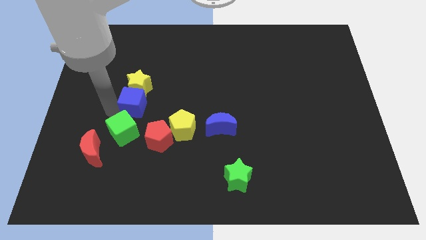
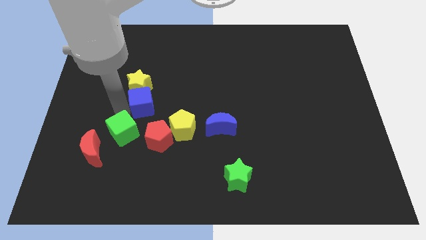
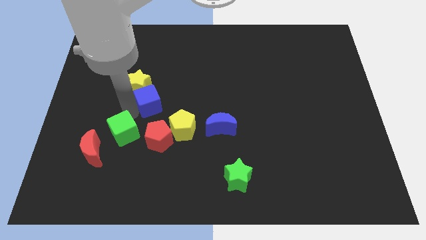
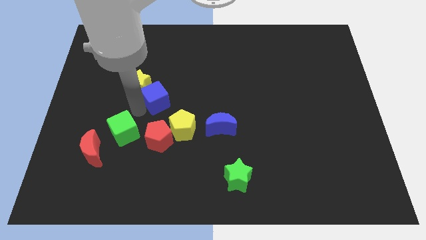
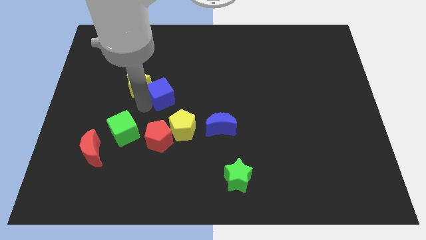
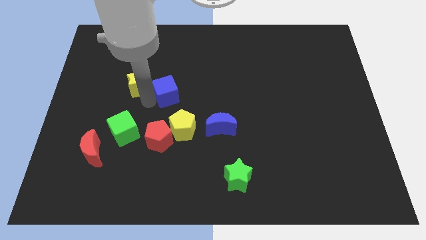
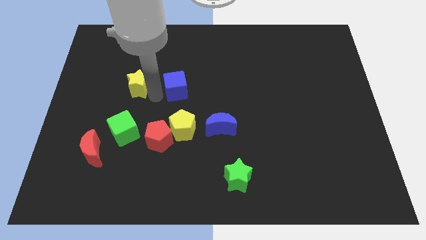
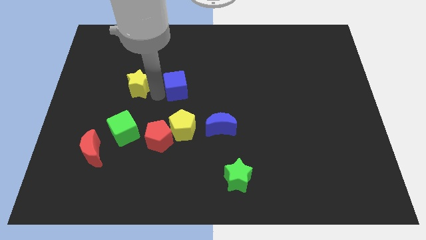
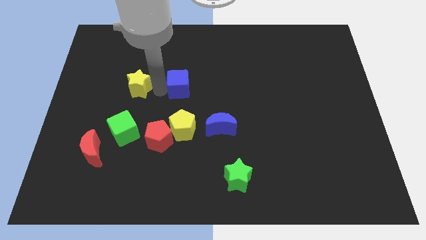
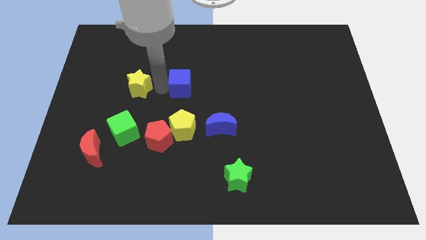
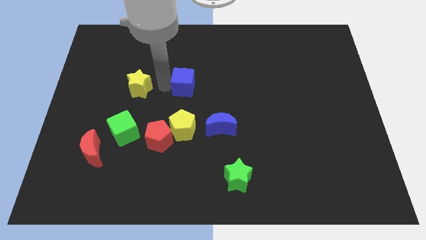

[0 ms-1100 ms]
push the blue cube to the right of the yellow star

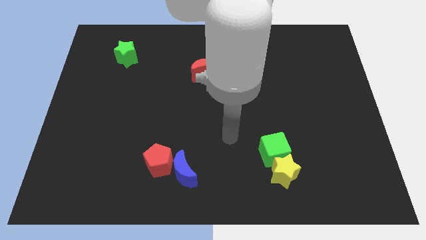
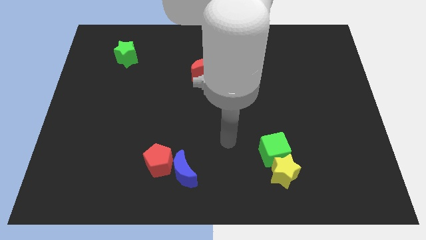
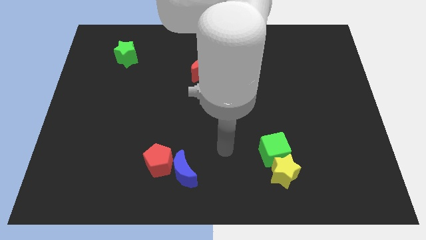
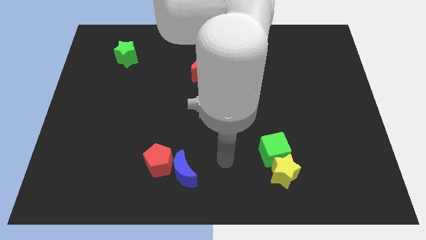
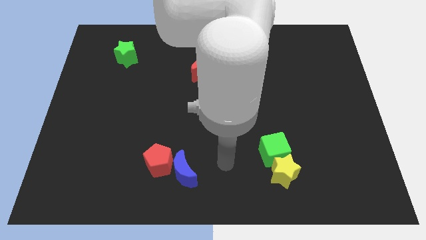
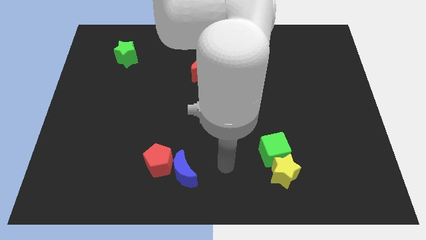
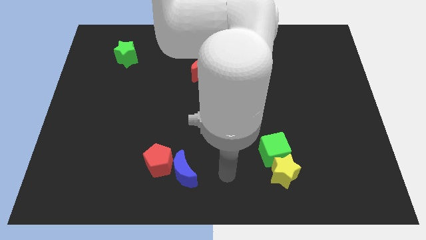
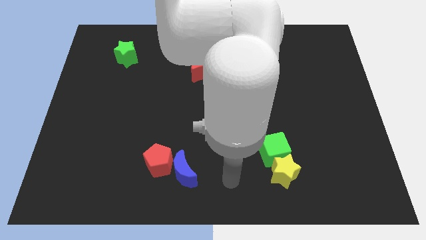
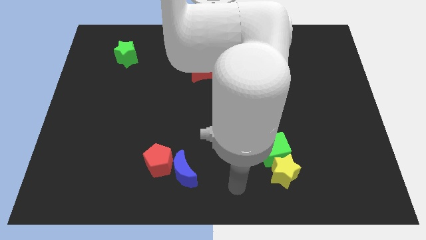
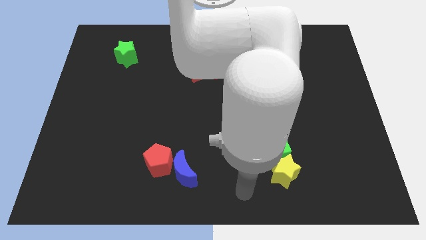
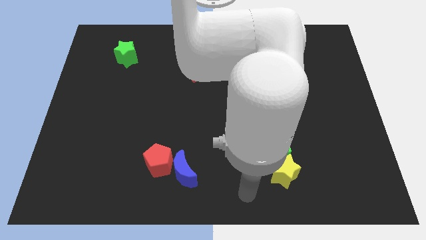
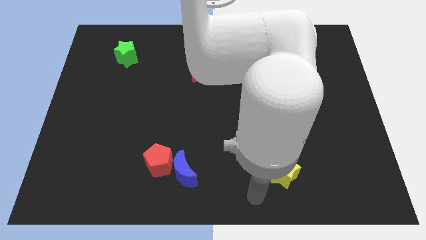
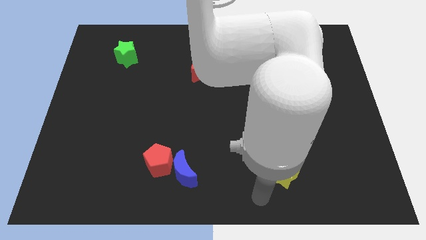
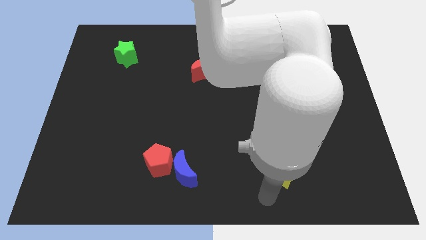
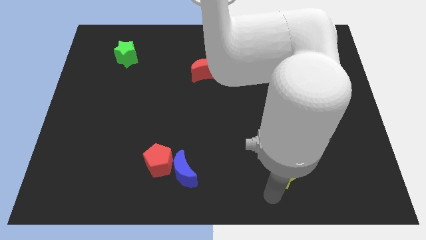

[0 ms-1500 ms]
point your arm below the yellow star

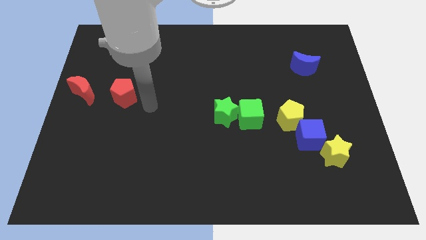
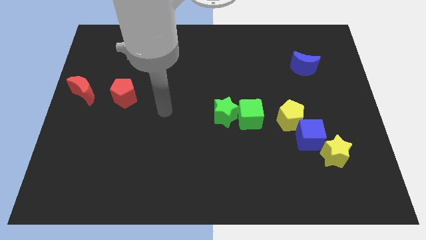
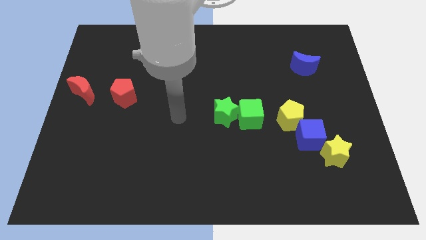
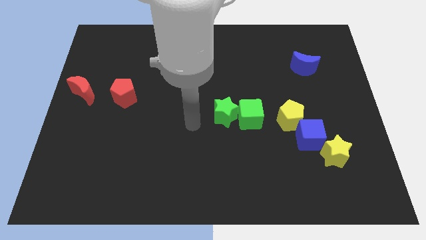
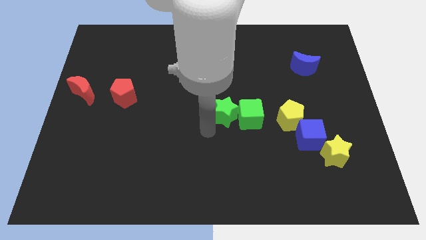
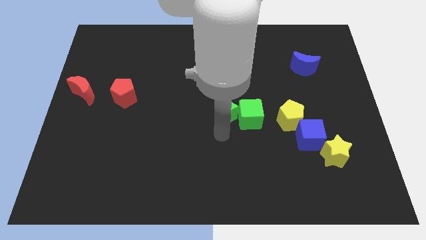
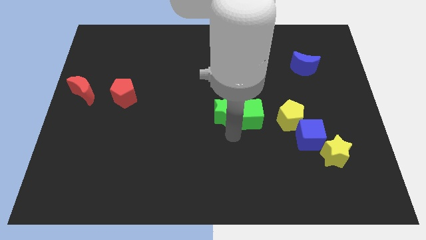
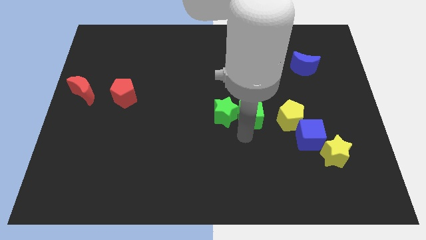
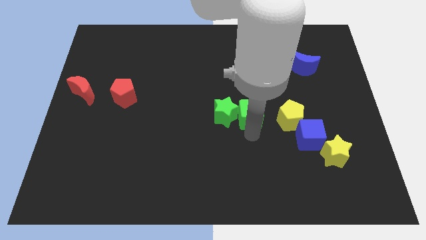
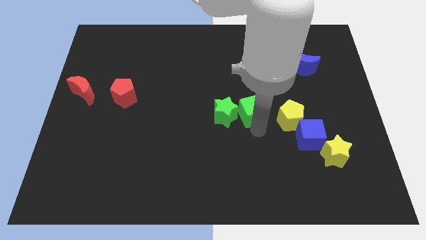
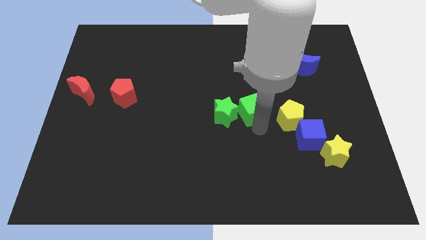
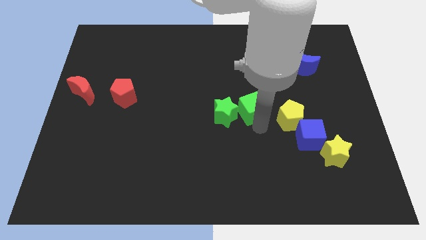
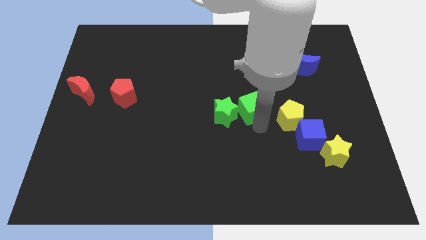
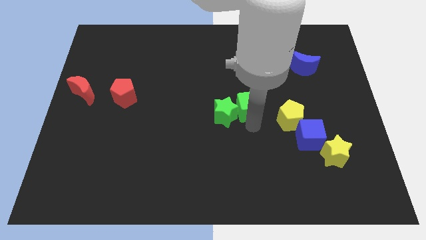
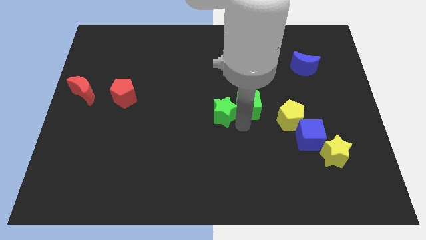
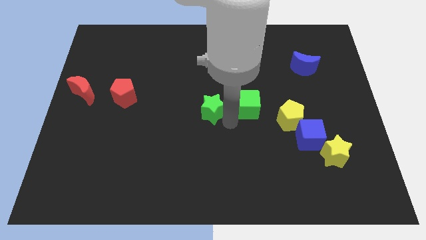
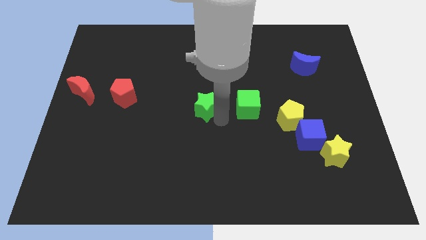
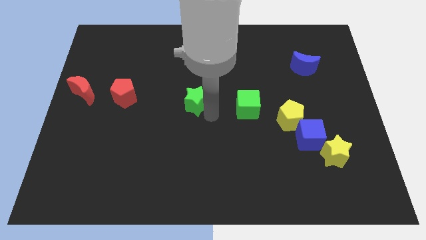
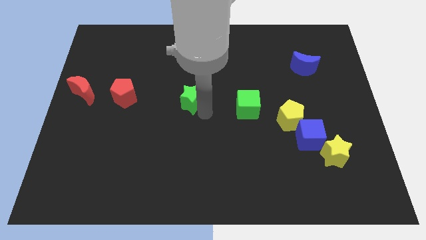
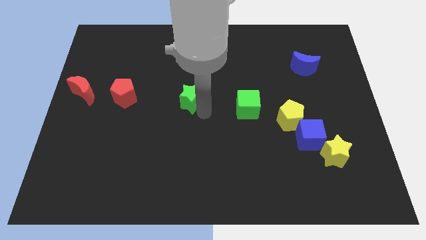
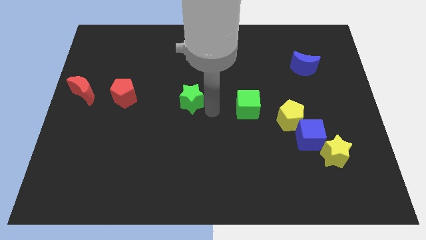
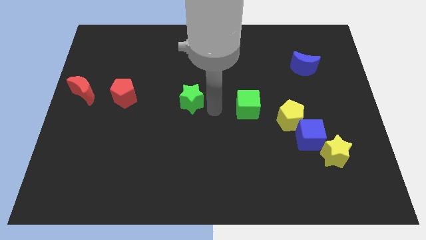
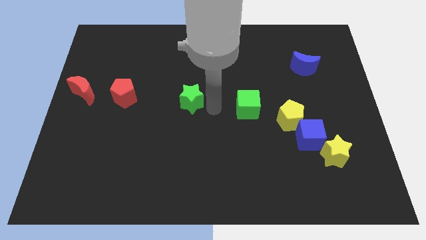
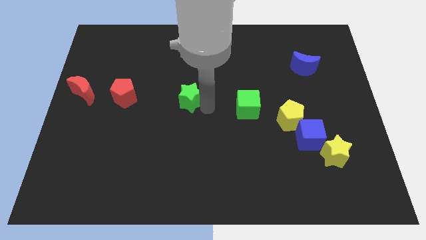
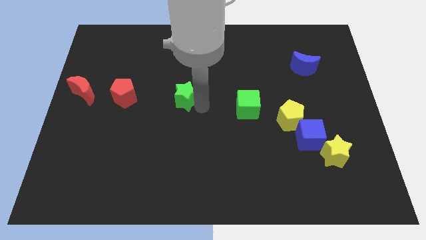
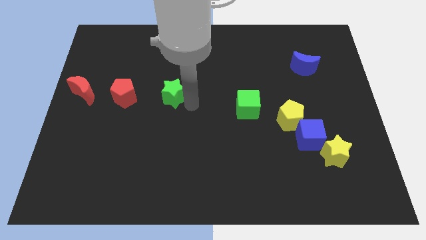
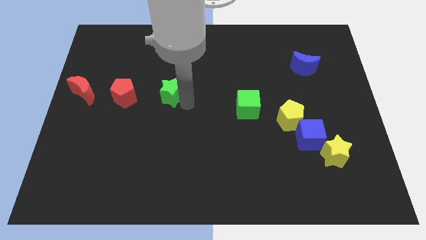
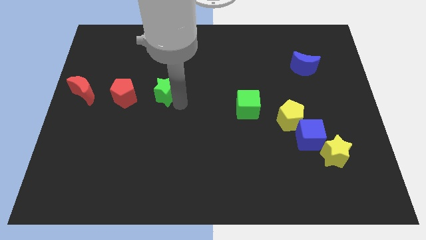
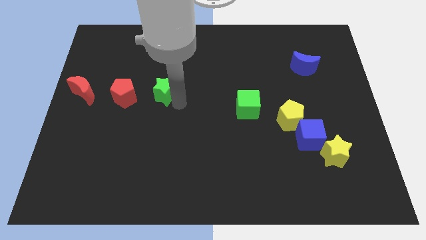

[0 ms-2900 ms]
move the green star to the right of the red pentagon

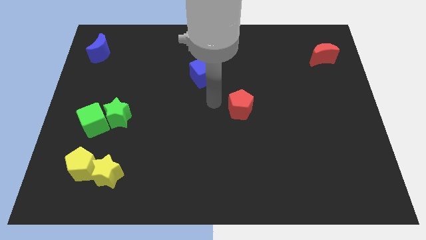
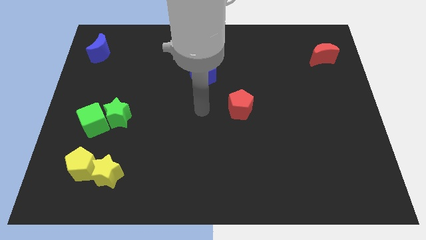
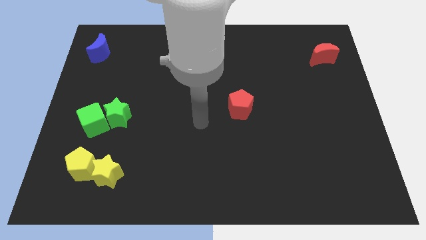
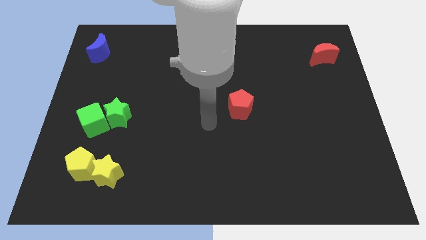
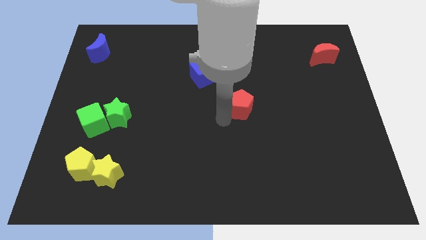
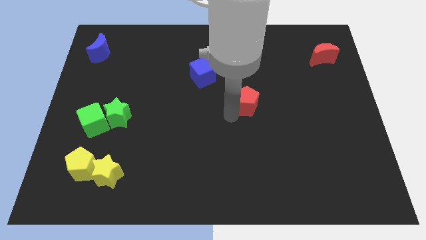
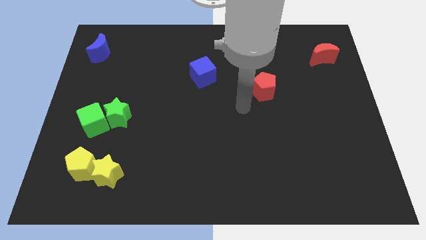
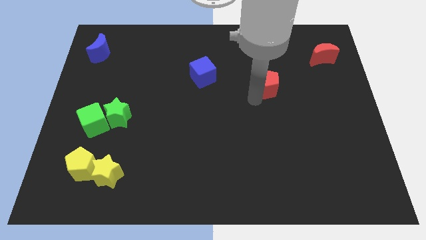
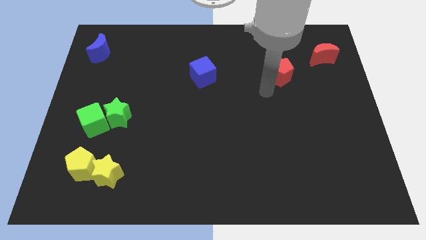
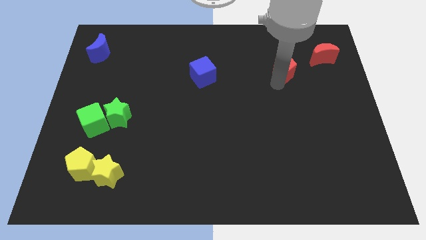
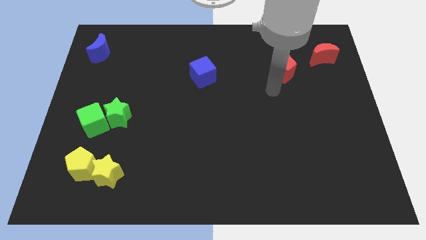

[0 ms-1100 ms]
move red pentagon towards red moon

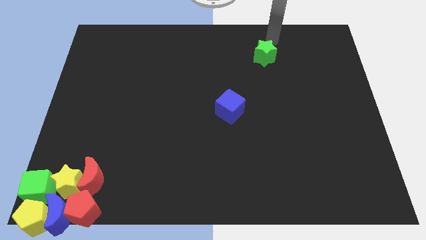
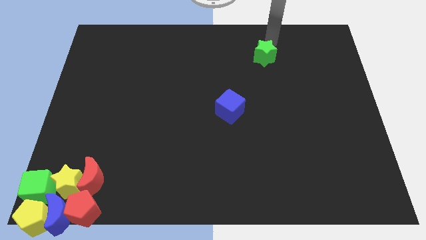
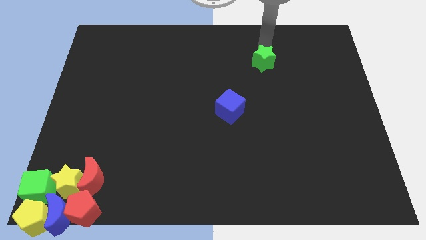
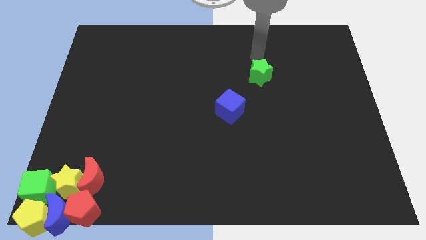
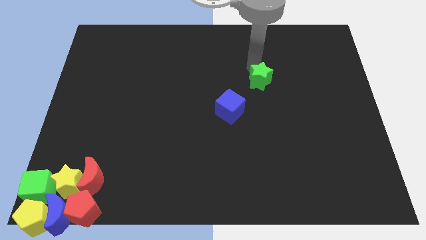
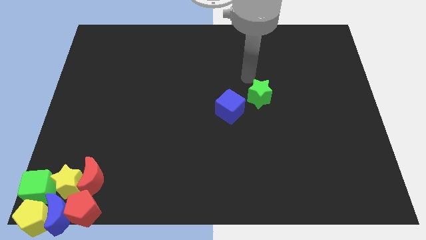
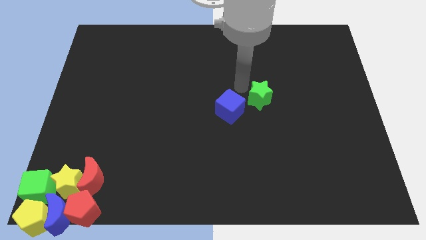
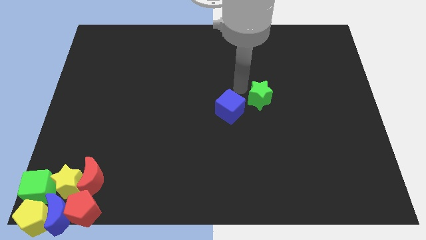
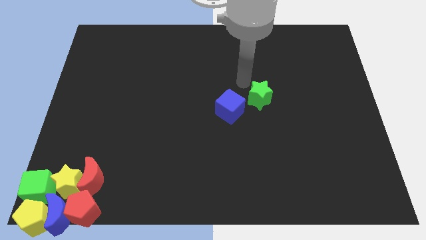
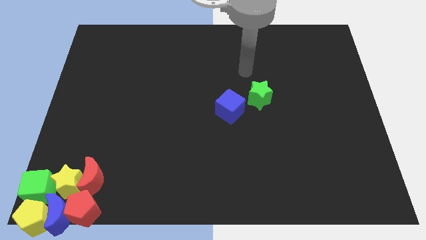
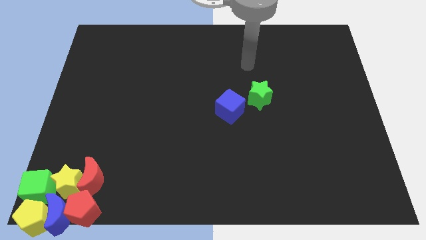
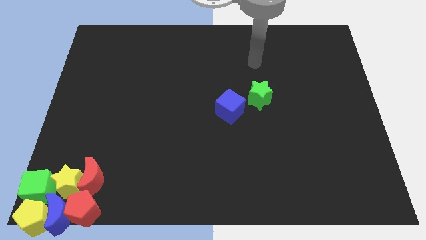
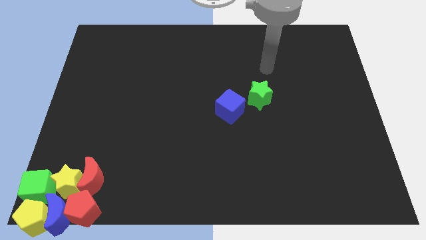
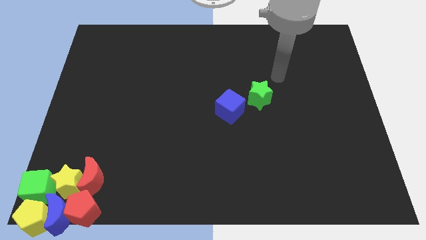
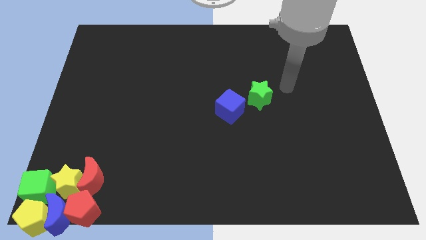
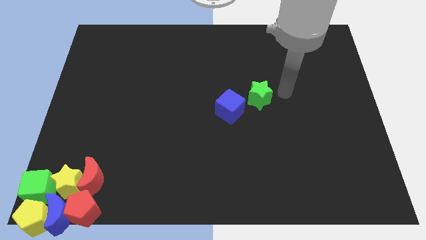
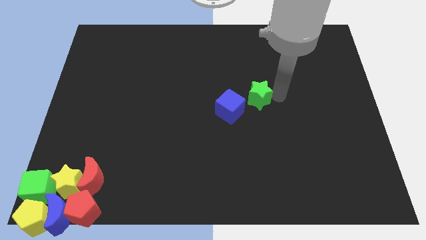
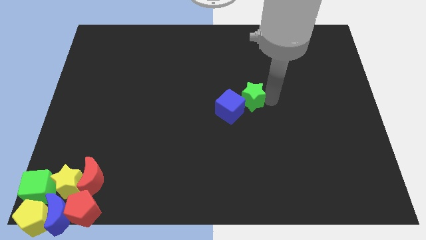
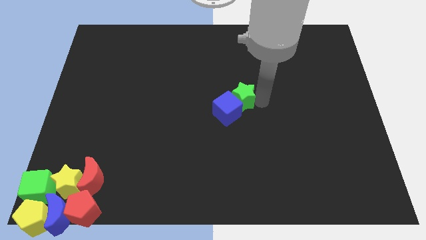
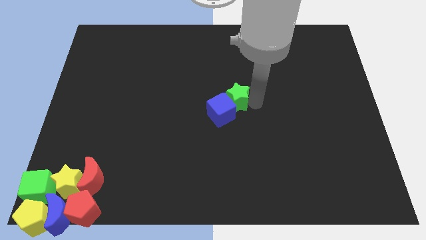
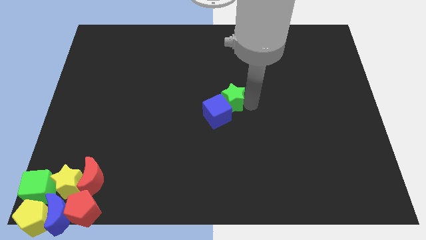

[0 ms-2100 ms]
group up the blue cube and green star at the center of the board

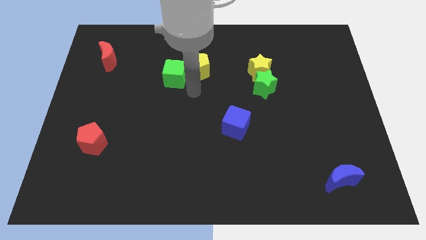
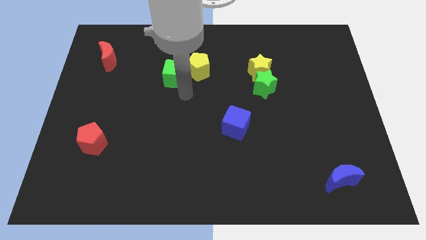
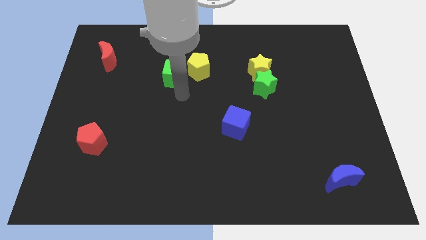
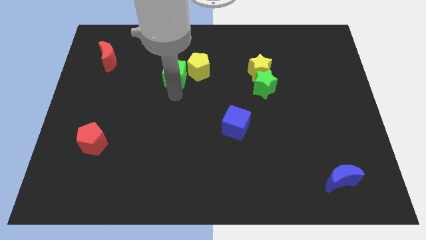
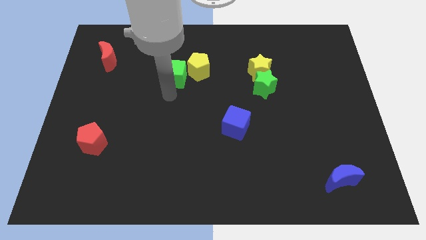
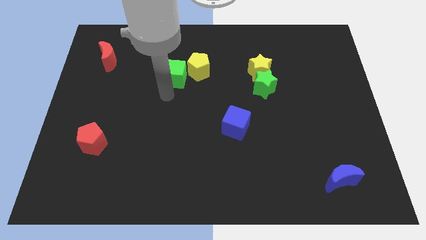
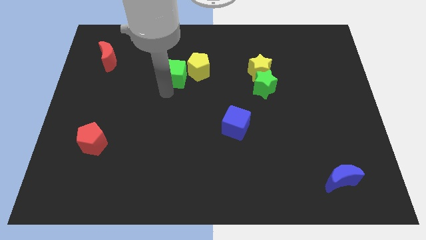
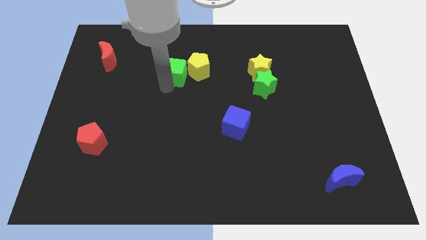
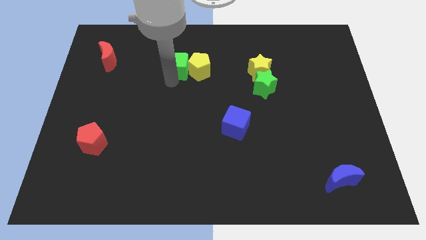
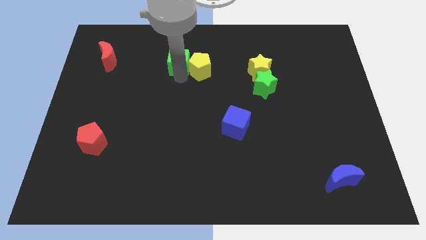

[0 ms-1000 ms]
adjust the green cube to the left of the yellow pentagon
